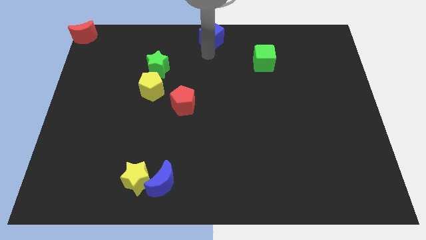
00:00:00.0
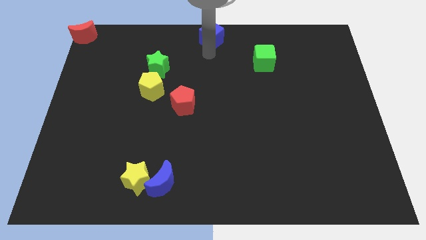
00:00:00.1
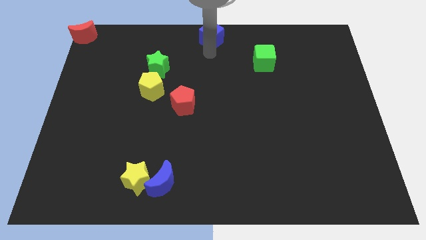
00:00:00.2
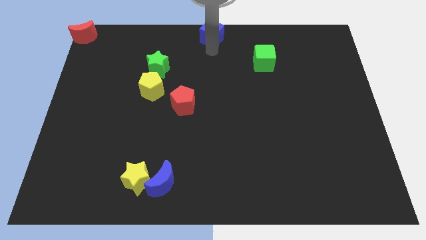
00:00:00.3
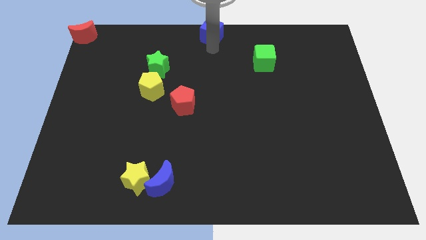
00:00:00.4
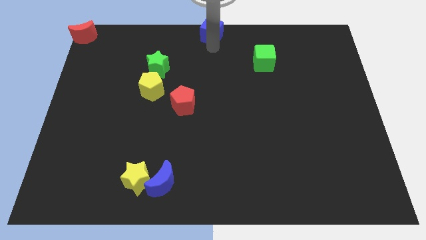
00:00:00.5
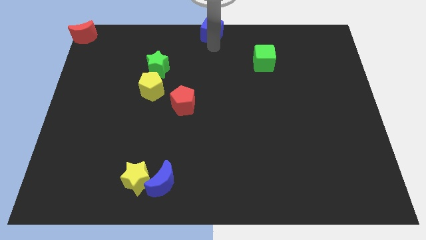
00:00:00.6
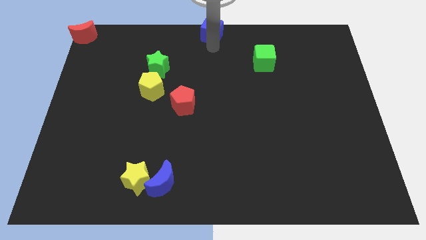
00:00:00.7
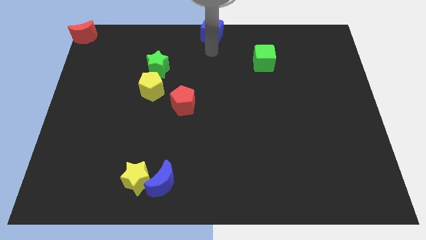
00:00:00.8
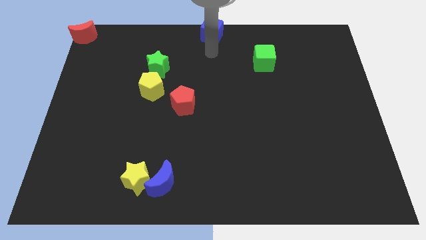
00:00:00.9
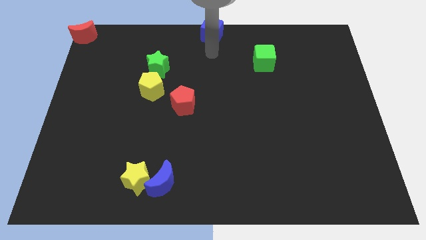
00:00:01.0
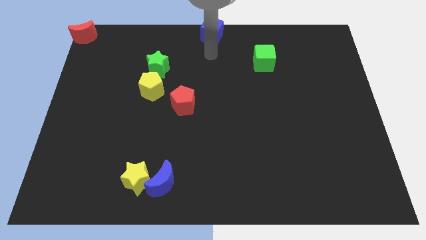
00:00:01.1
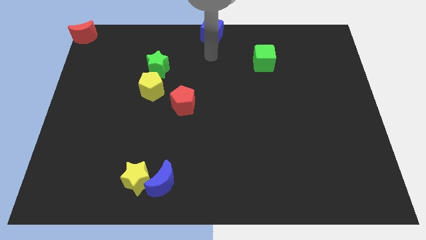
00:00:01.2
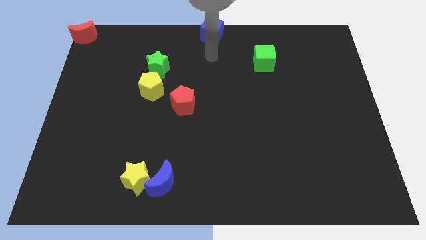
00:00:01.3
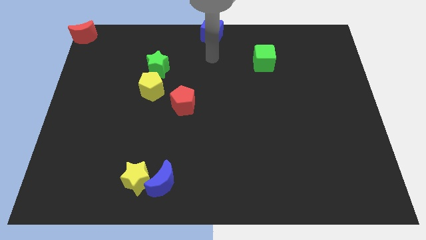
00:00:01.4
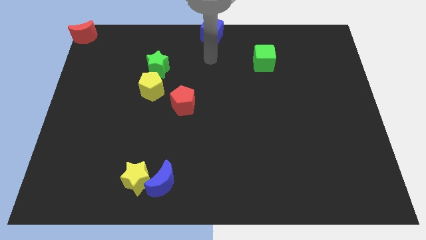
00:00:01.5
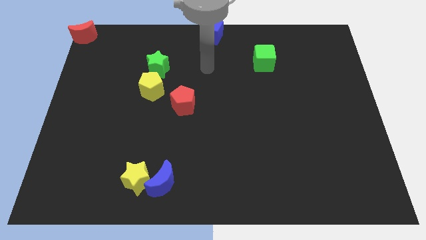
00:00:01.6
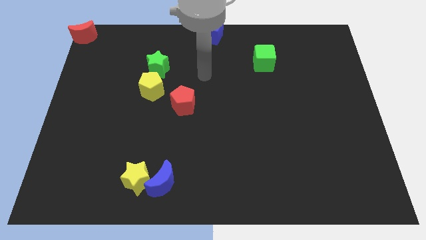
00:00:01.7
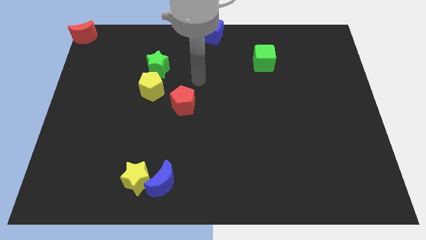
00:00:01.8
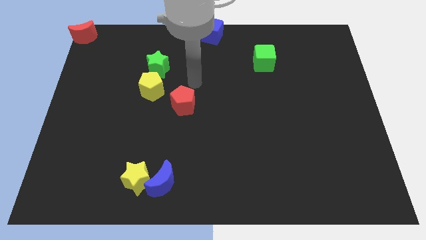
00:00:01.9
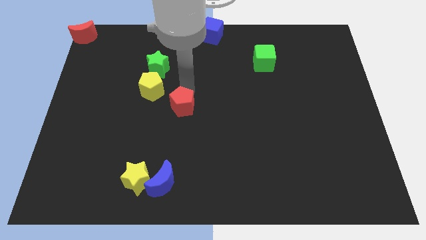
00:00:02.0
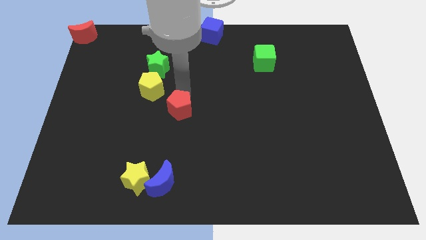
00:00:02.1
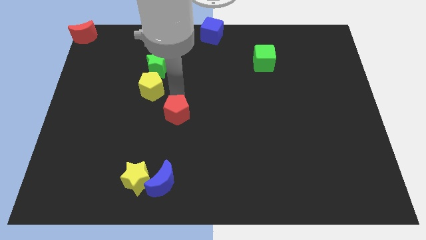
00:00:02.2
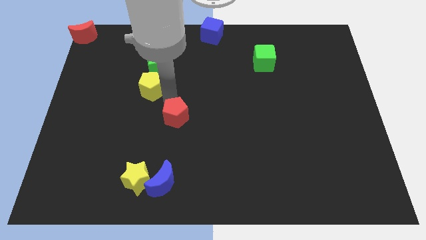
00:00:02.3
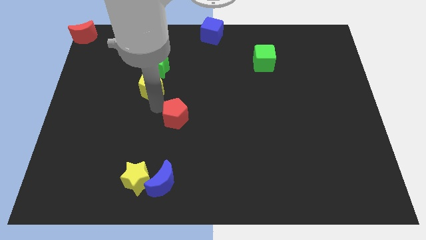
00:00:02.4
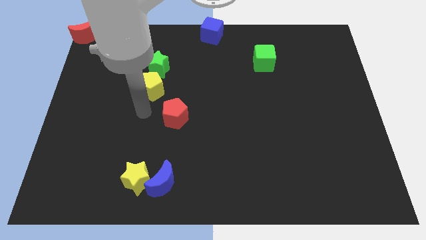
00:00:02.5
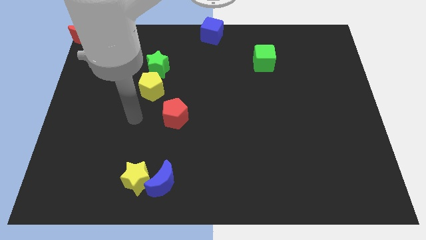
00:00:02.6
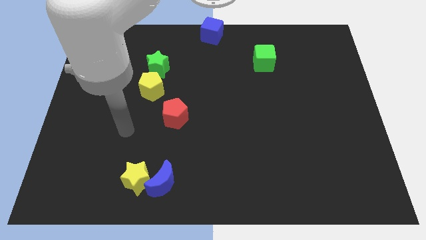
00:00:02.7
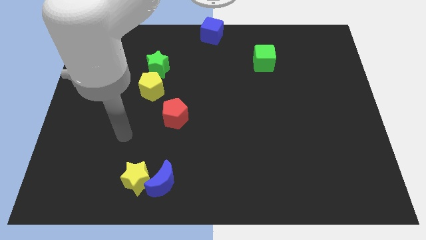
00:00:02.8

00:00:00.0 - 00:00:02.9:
push the red pentagon diagonally to the bottom right of the yellow pentagon

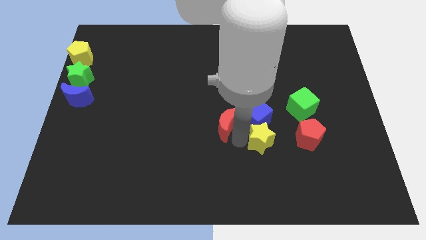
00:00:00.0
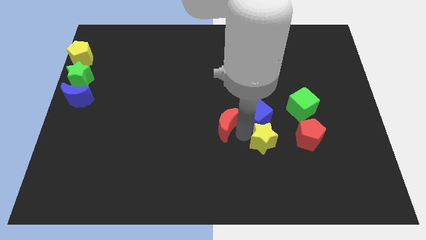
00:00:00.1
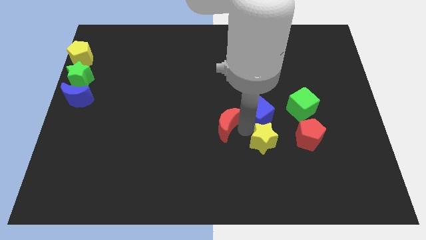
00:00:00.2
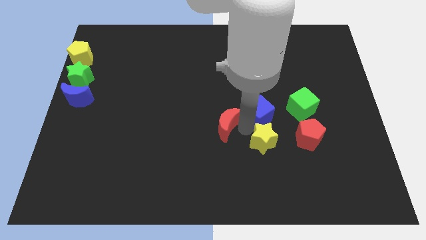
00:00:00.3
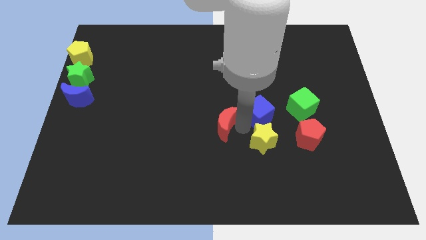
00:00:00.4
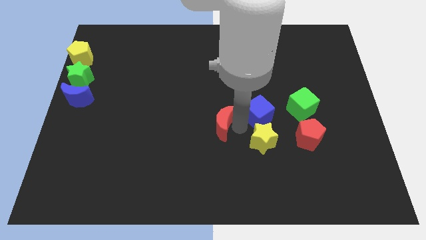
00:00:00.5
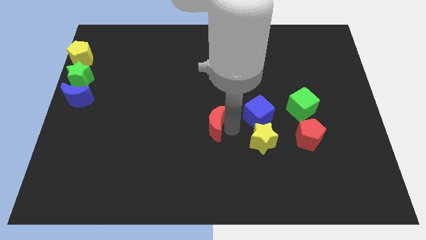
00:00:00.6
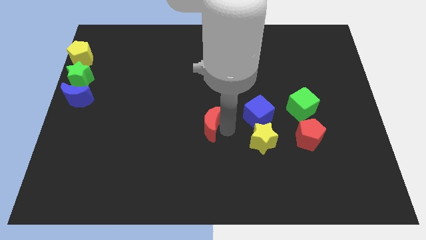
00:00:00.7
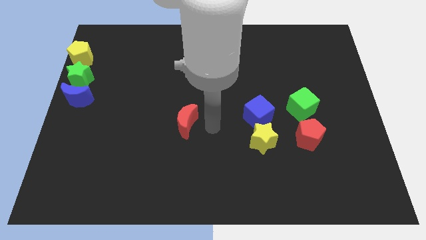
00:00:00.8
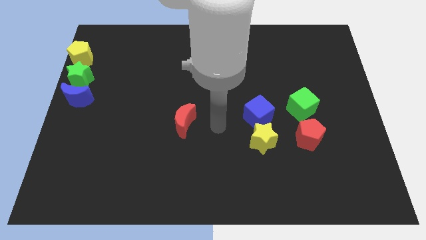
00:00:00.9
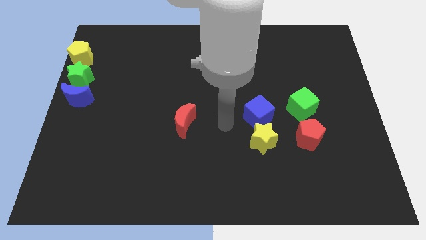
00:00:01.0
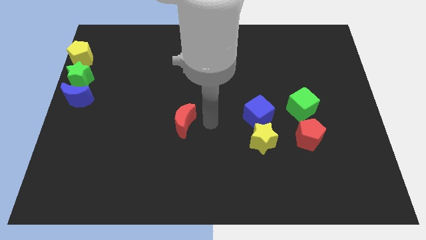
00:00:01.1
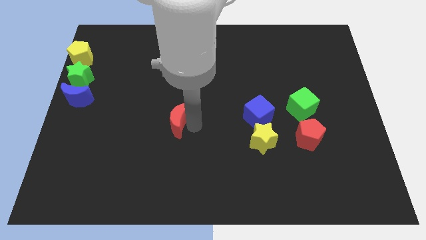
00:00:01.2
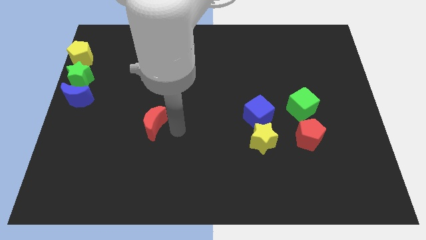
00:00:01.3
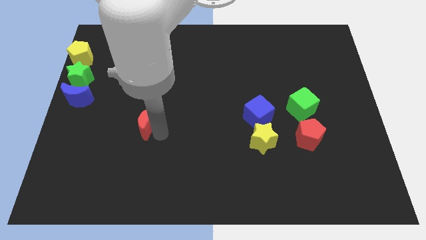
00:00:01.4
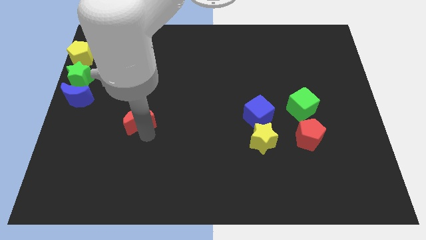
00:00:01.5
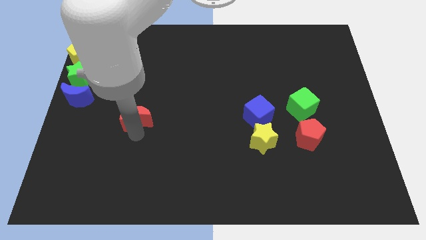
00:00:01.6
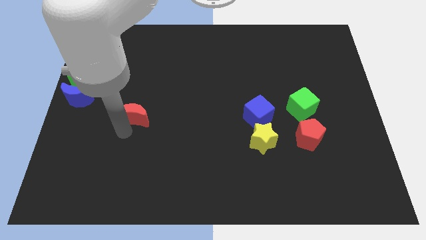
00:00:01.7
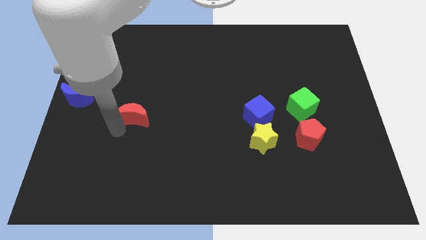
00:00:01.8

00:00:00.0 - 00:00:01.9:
drag the red crescent to the left side of the board

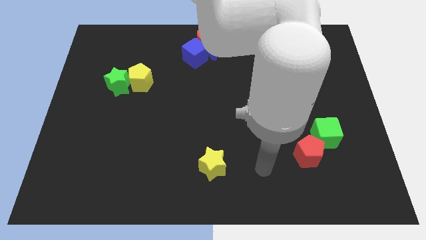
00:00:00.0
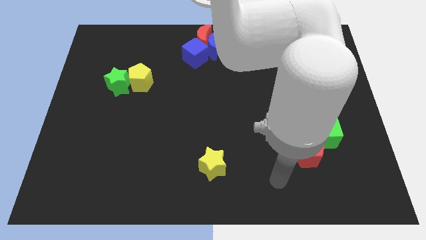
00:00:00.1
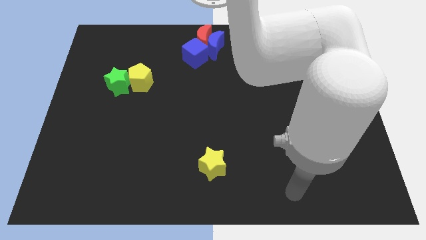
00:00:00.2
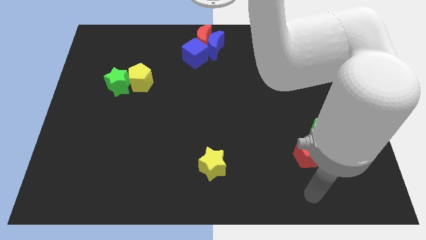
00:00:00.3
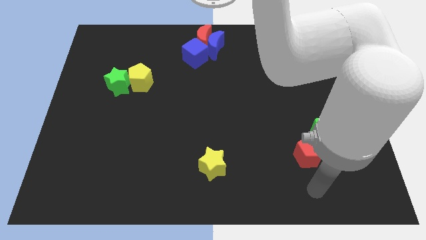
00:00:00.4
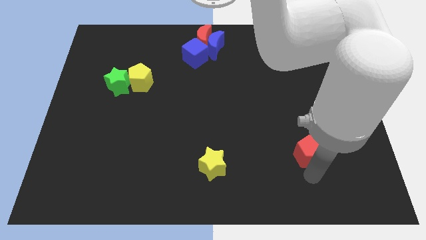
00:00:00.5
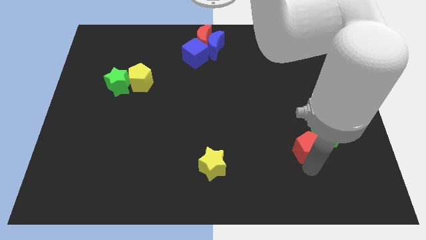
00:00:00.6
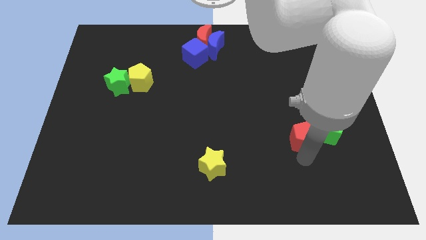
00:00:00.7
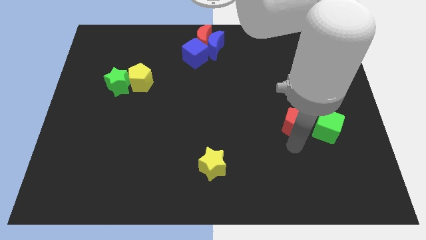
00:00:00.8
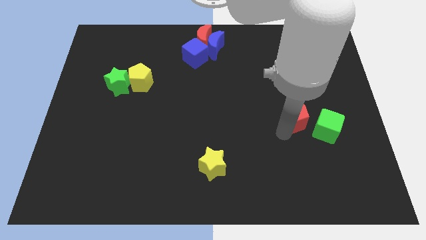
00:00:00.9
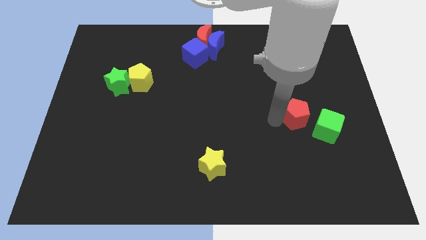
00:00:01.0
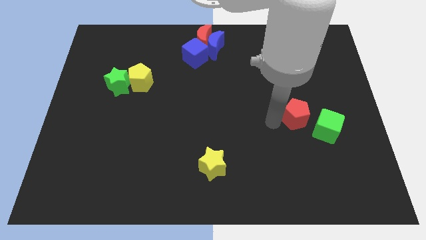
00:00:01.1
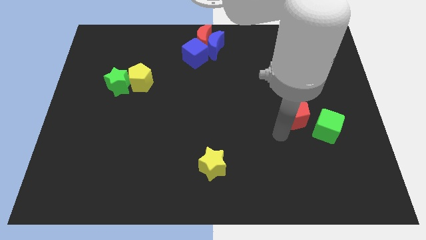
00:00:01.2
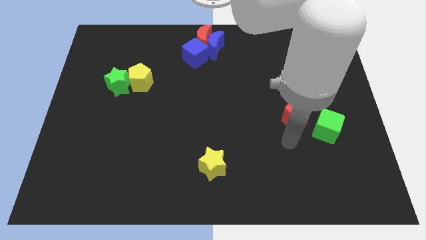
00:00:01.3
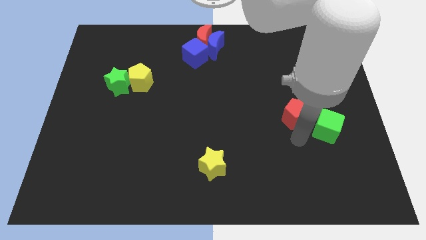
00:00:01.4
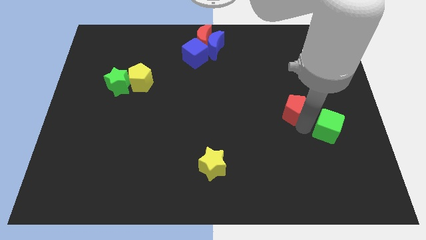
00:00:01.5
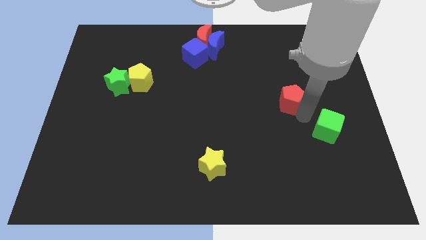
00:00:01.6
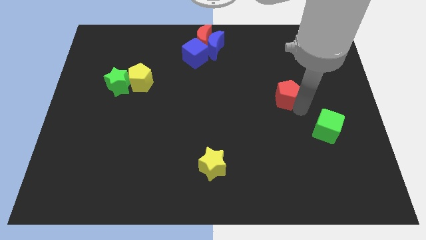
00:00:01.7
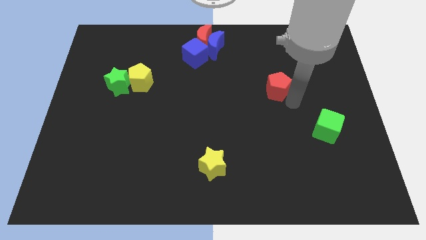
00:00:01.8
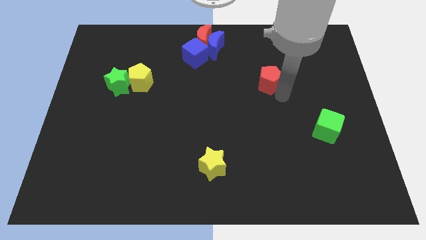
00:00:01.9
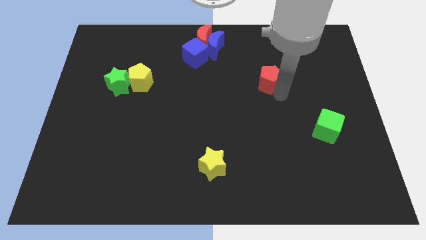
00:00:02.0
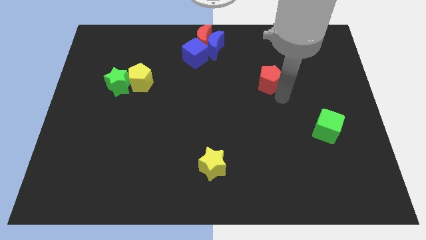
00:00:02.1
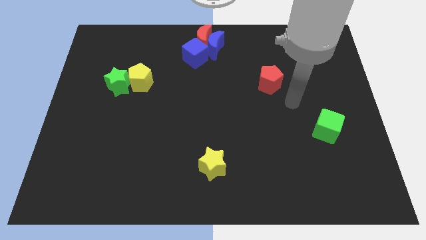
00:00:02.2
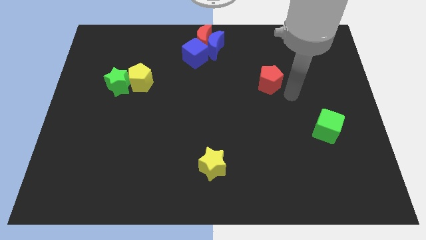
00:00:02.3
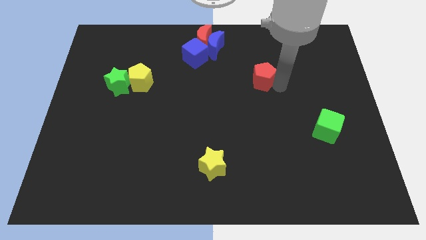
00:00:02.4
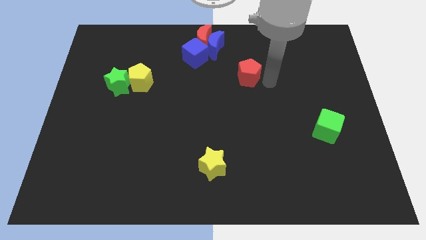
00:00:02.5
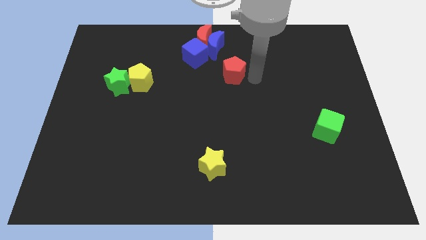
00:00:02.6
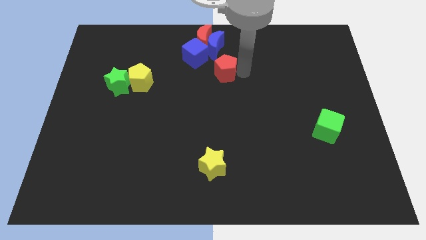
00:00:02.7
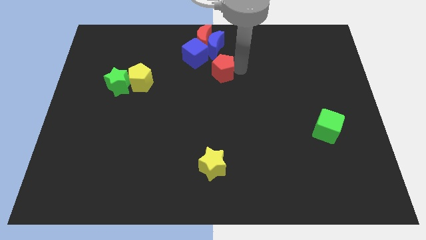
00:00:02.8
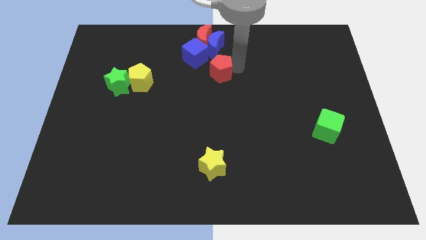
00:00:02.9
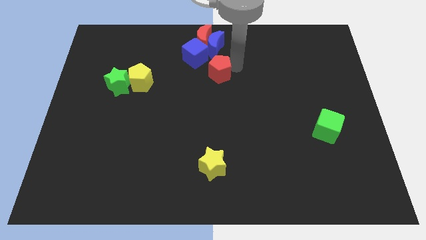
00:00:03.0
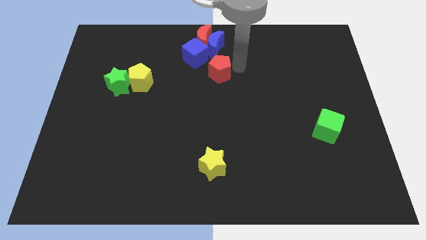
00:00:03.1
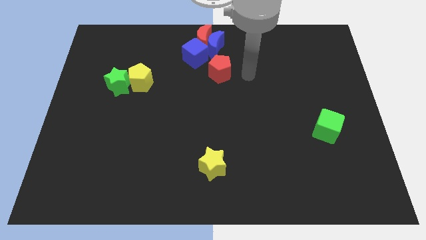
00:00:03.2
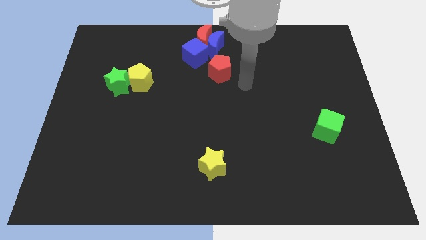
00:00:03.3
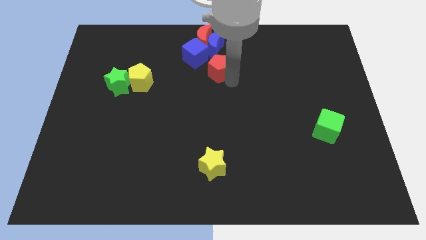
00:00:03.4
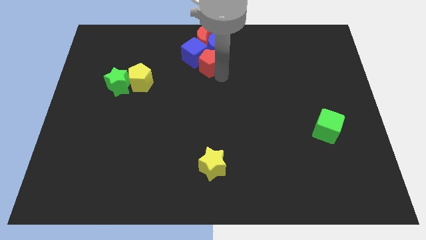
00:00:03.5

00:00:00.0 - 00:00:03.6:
move the red pentagon into the blue cube from the bottom

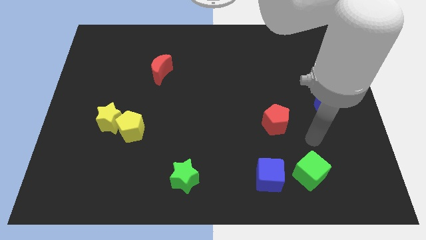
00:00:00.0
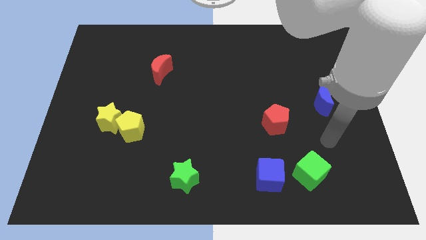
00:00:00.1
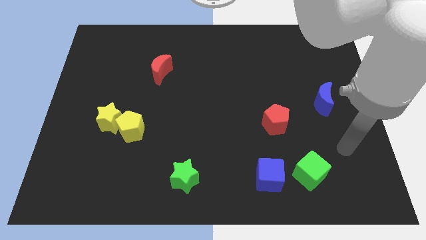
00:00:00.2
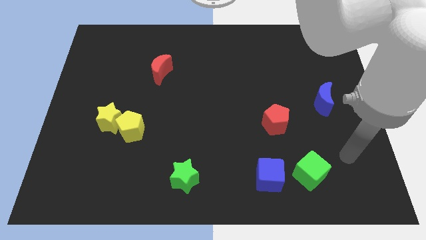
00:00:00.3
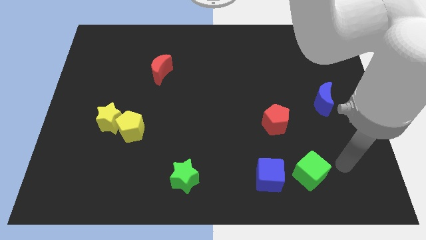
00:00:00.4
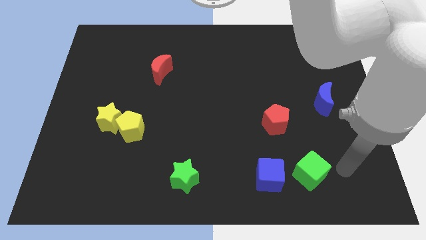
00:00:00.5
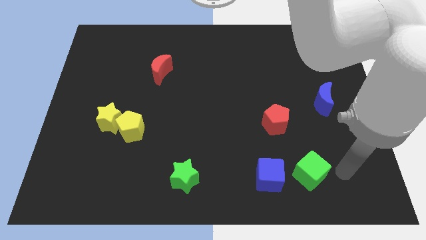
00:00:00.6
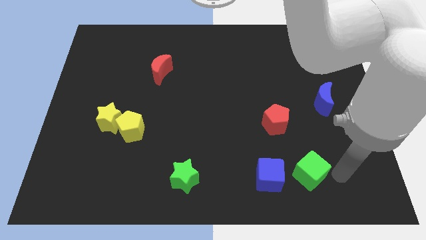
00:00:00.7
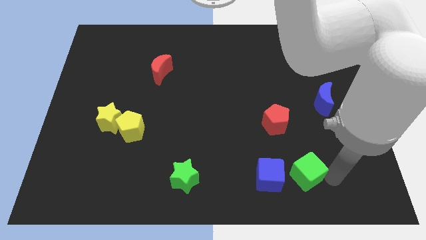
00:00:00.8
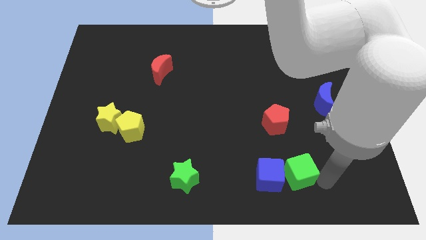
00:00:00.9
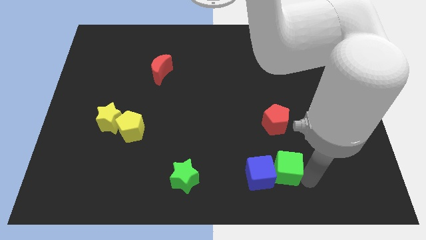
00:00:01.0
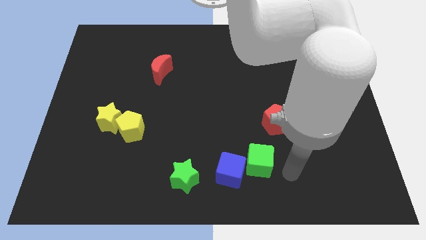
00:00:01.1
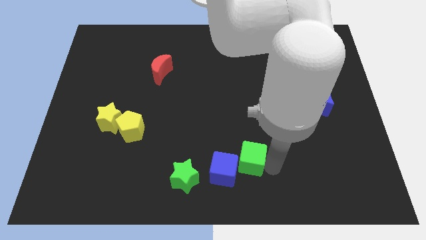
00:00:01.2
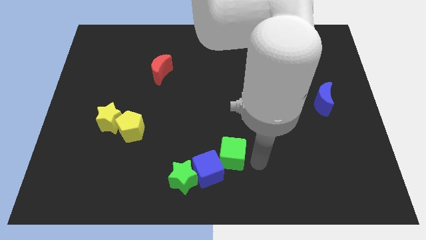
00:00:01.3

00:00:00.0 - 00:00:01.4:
push the green cube towards the blue cube
